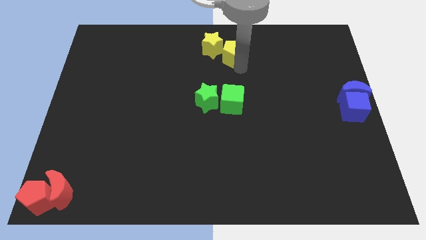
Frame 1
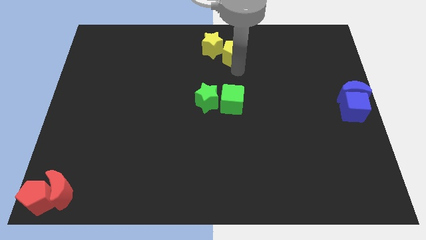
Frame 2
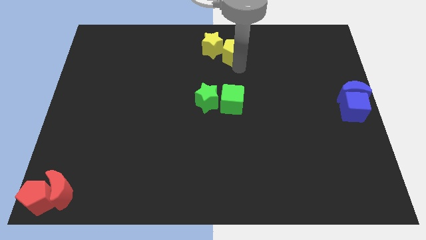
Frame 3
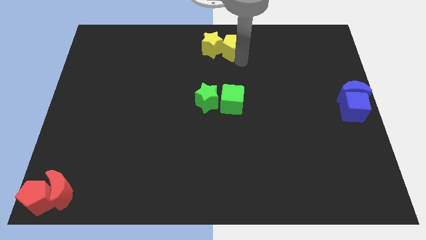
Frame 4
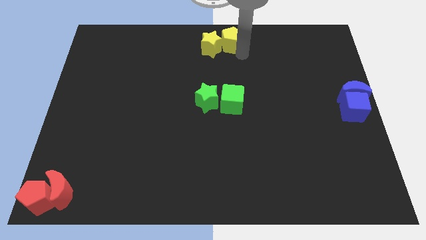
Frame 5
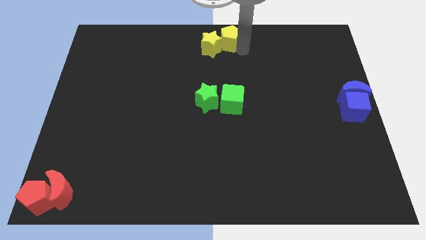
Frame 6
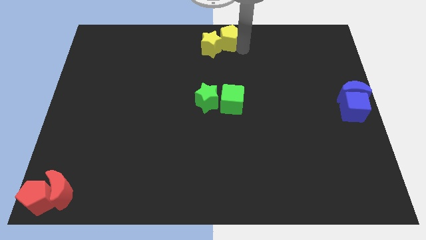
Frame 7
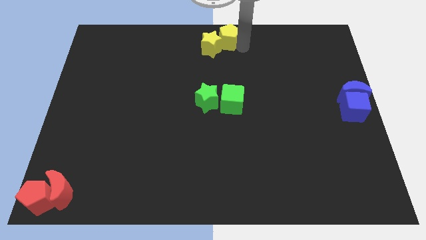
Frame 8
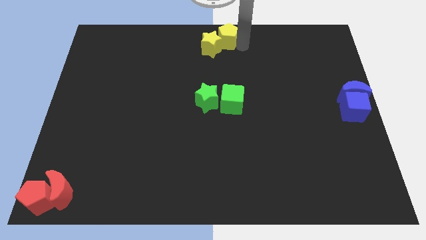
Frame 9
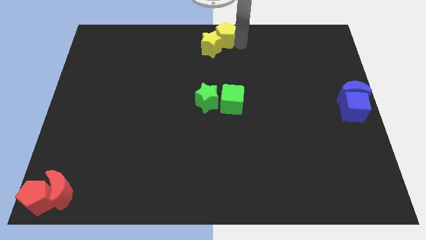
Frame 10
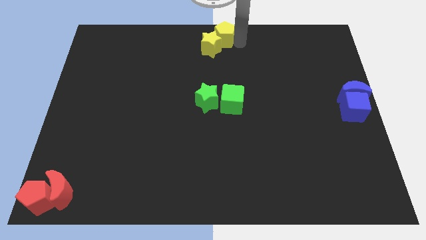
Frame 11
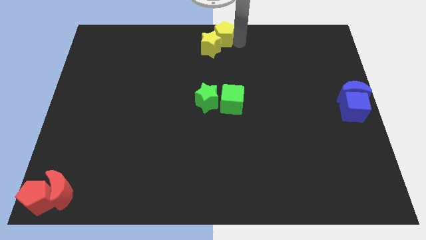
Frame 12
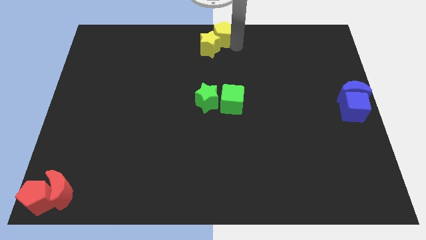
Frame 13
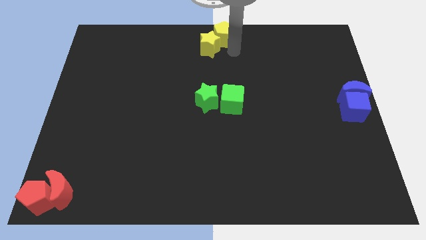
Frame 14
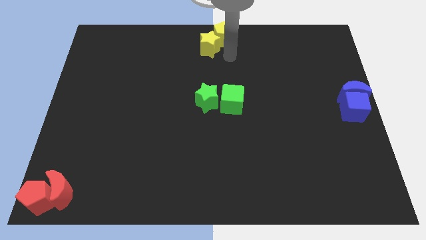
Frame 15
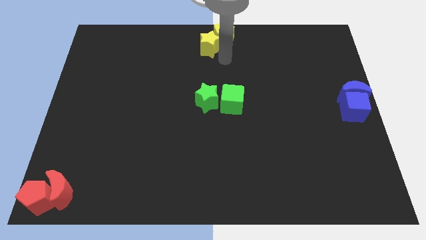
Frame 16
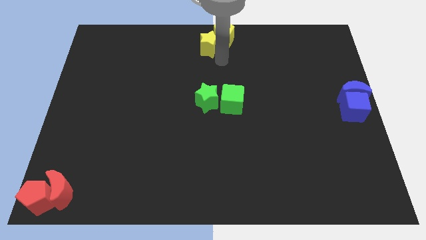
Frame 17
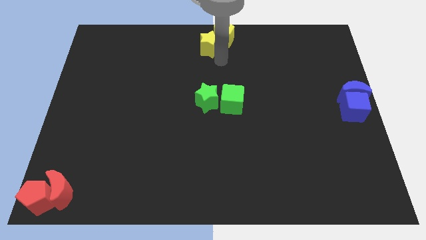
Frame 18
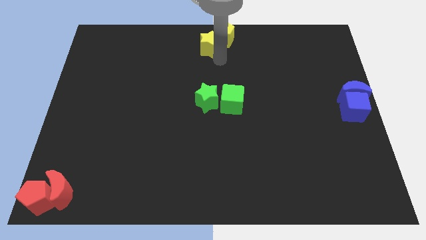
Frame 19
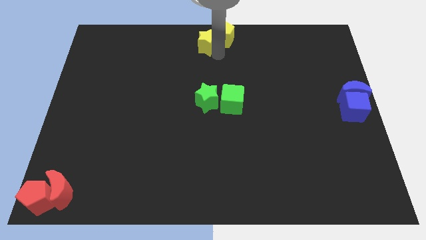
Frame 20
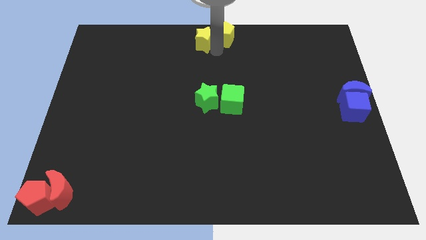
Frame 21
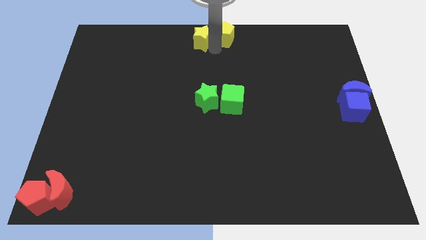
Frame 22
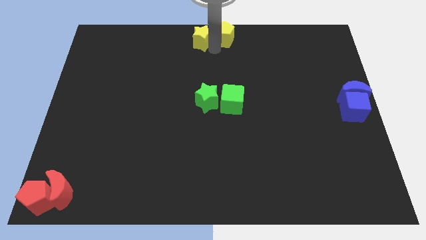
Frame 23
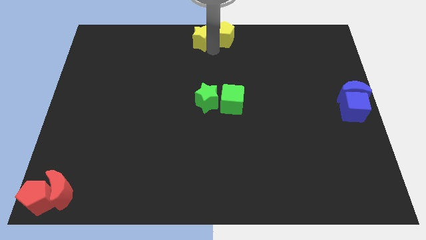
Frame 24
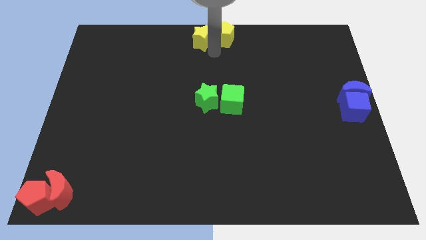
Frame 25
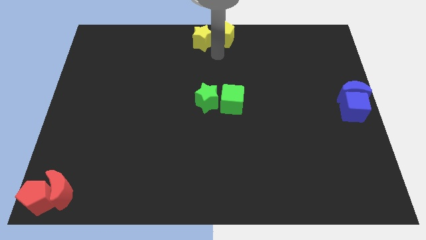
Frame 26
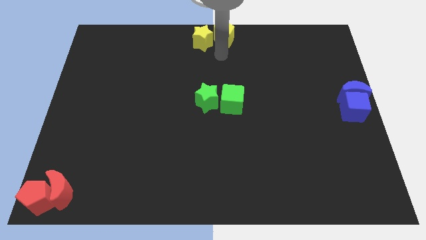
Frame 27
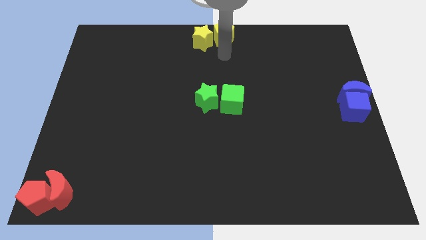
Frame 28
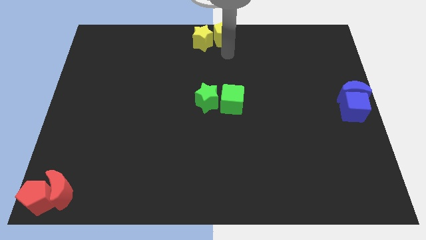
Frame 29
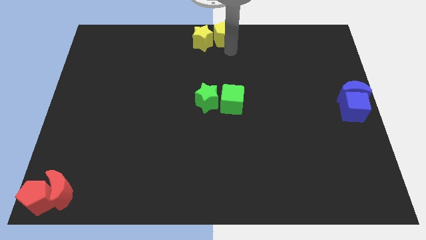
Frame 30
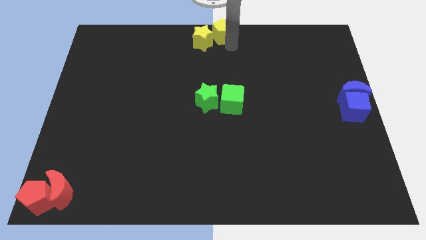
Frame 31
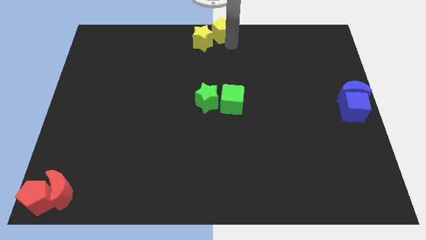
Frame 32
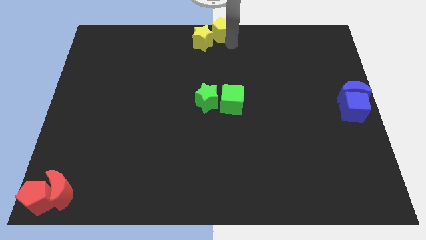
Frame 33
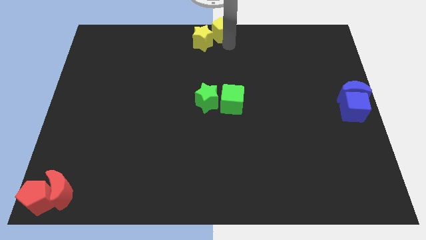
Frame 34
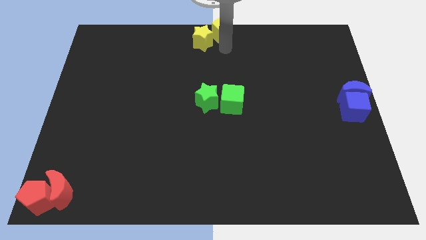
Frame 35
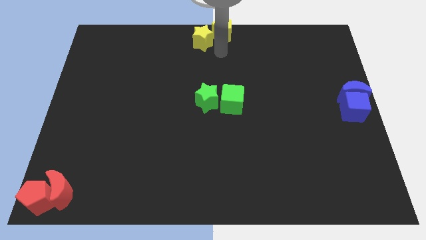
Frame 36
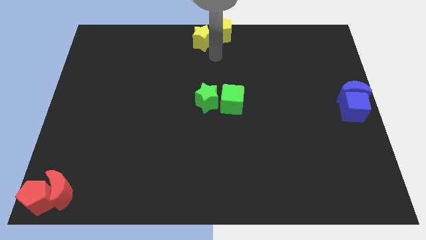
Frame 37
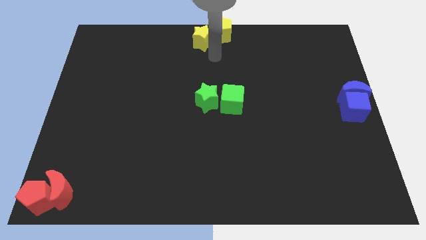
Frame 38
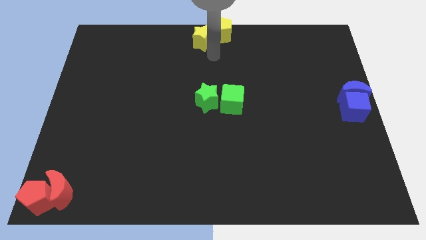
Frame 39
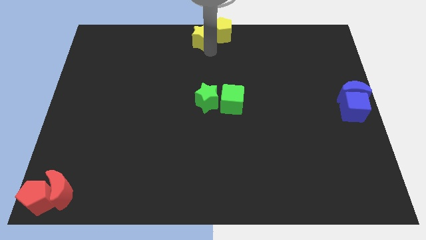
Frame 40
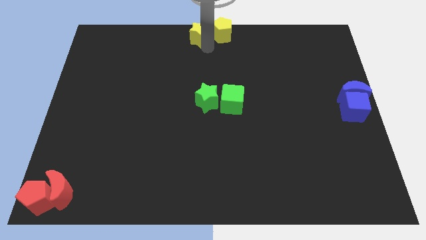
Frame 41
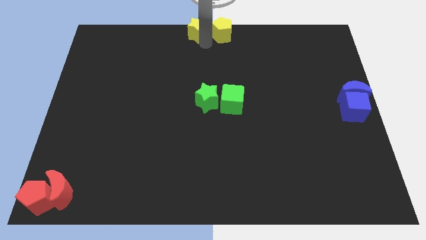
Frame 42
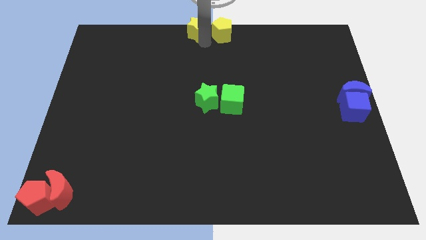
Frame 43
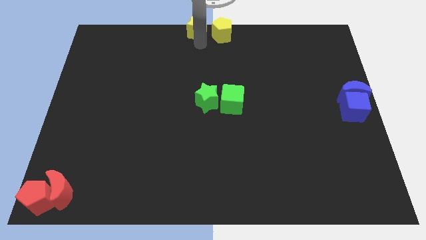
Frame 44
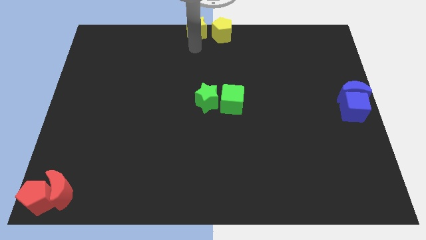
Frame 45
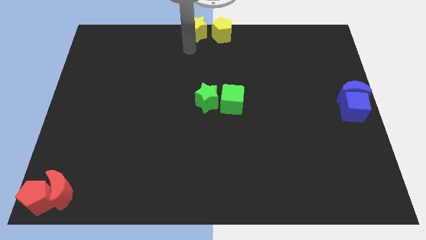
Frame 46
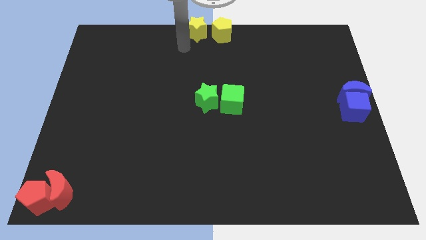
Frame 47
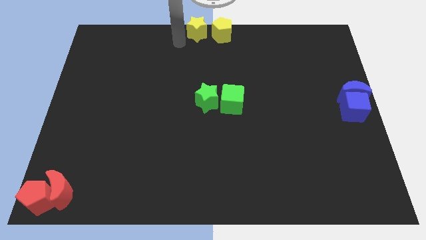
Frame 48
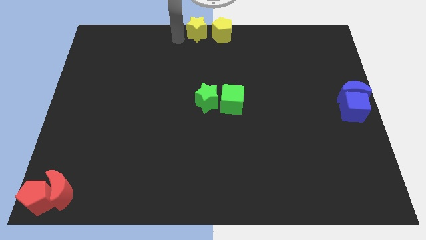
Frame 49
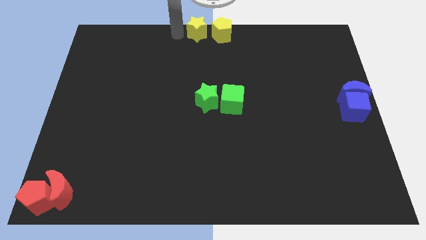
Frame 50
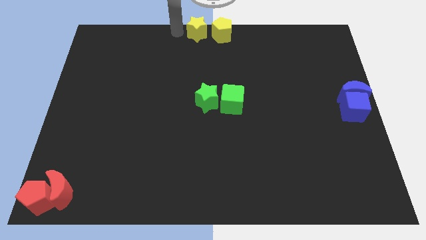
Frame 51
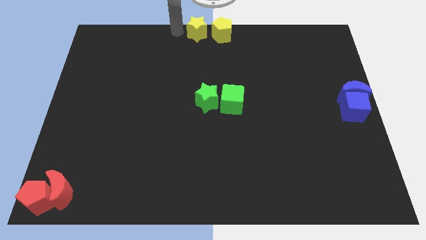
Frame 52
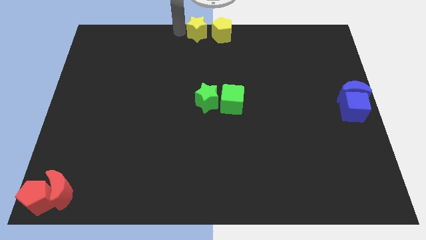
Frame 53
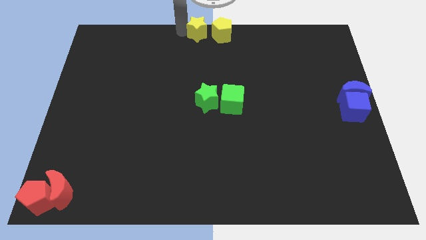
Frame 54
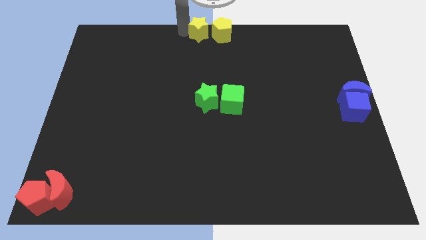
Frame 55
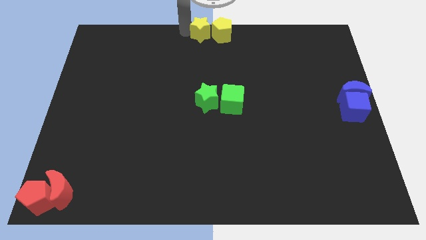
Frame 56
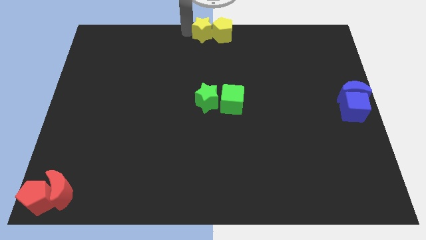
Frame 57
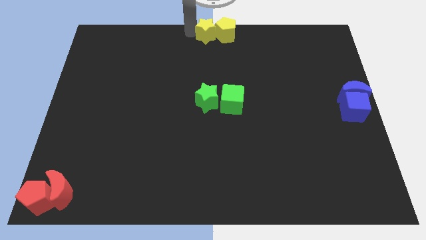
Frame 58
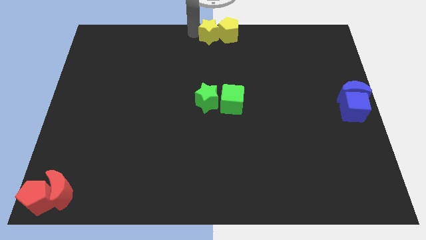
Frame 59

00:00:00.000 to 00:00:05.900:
move the yellow star and yellow pentagon to the top center of the board

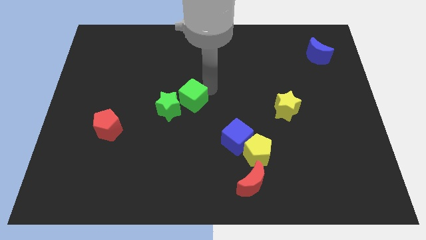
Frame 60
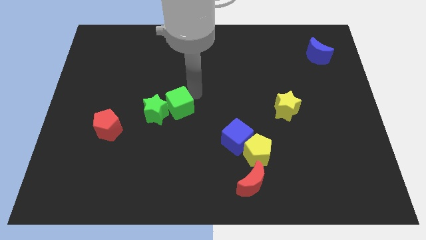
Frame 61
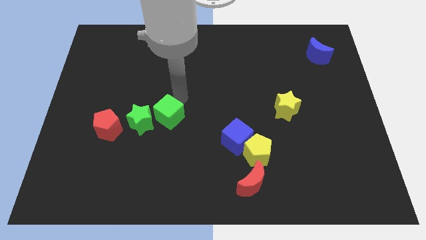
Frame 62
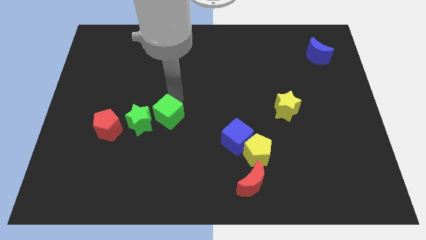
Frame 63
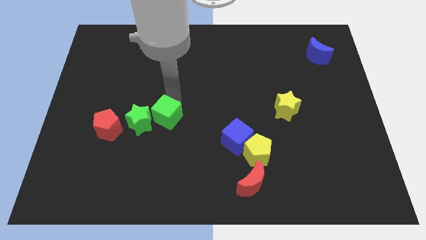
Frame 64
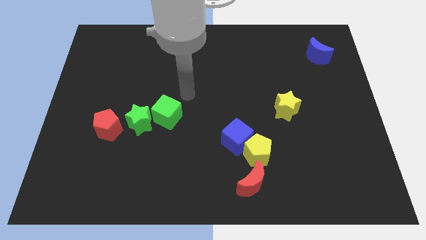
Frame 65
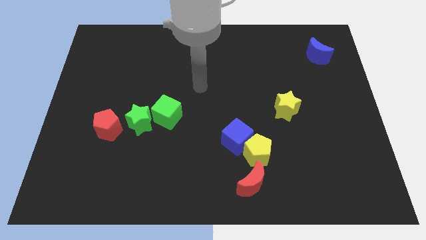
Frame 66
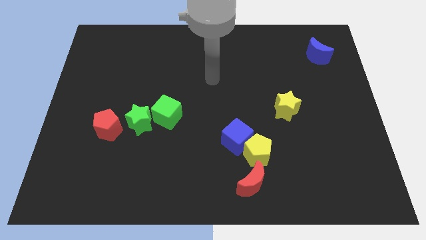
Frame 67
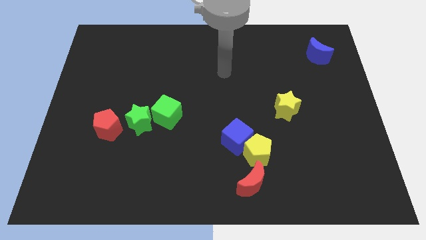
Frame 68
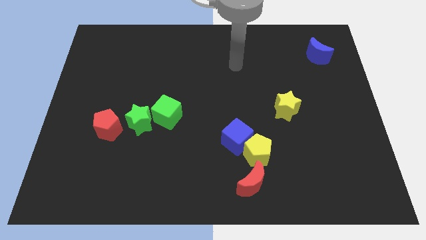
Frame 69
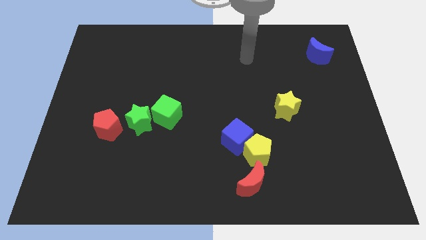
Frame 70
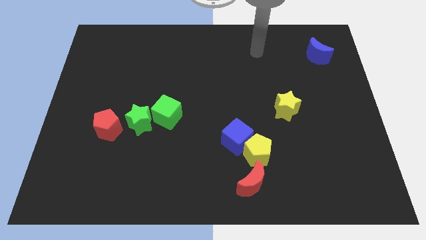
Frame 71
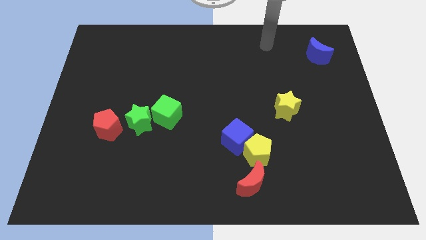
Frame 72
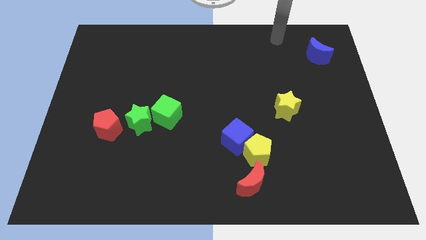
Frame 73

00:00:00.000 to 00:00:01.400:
move arm away from the green cube

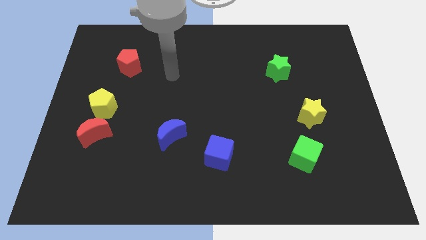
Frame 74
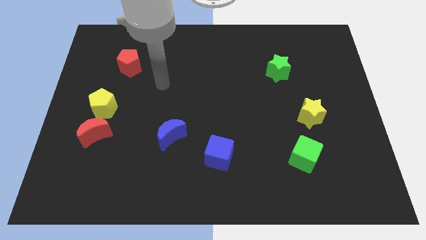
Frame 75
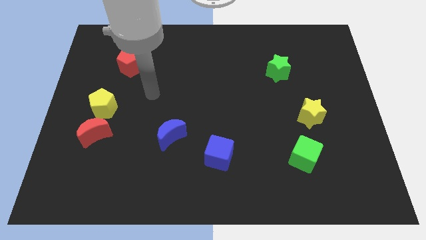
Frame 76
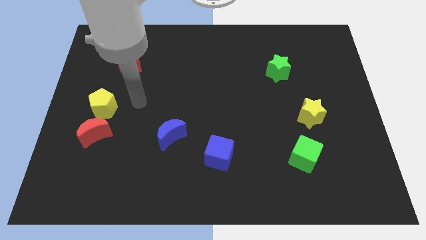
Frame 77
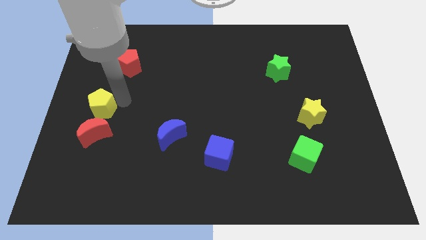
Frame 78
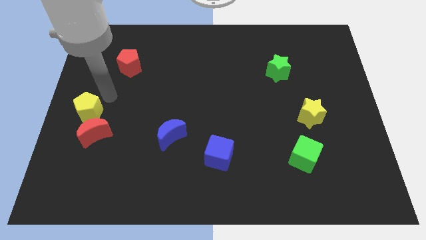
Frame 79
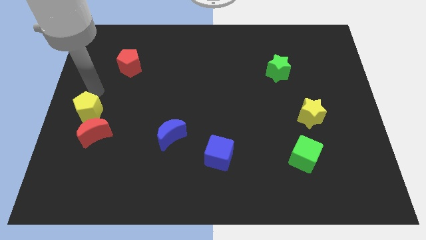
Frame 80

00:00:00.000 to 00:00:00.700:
push yellow pentagon slightly towards left

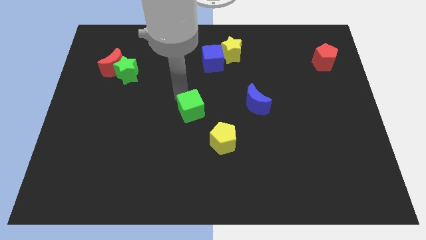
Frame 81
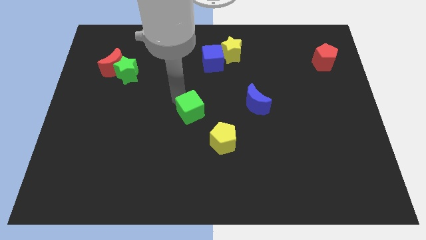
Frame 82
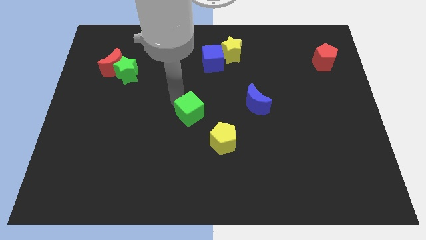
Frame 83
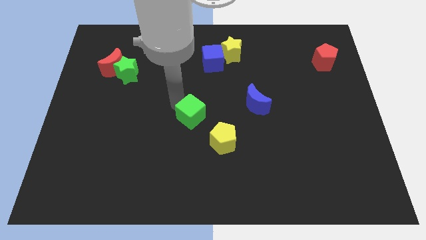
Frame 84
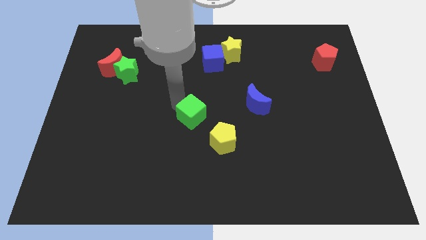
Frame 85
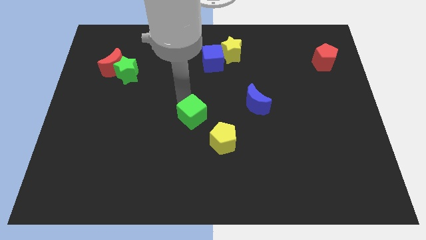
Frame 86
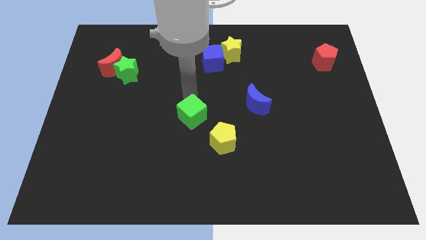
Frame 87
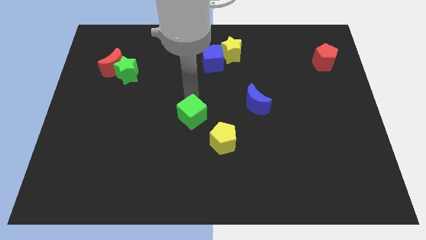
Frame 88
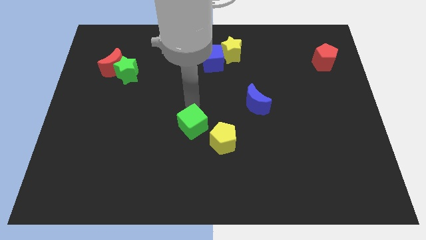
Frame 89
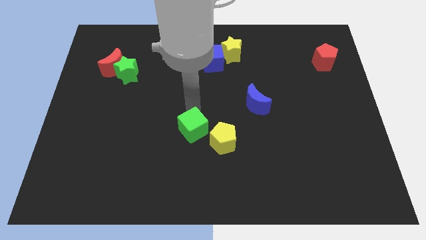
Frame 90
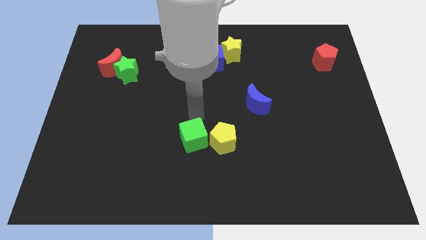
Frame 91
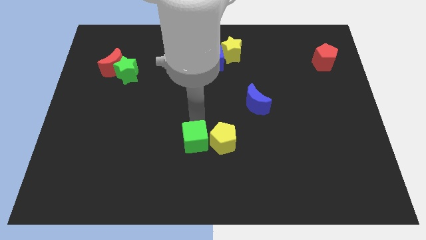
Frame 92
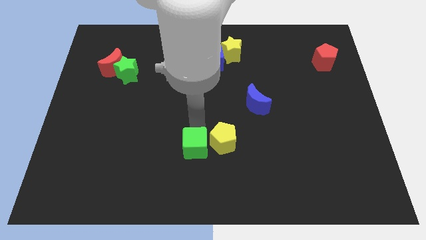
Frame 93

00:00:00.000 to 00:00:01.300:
move the green cube to the left of the yellow pentagon
